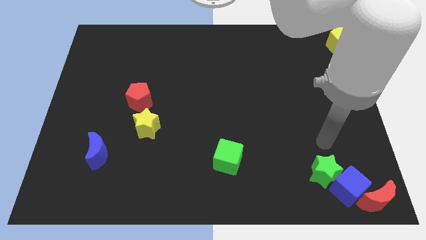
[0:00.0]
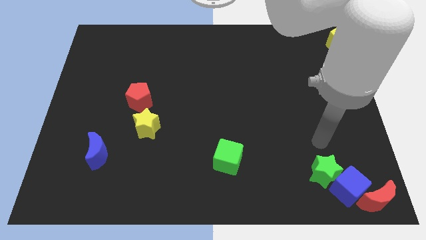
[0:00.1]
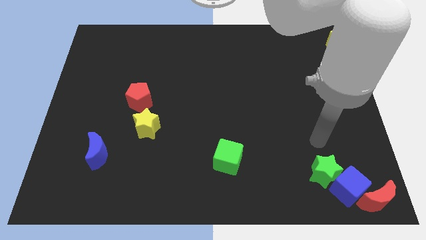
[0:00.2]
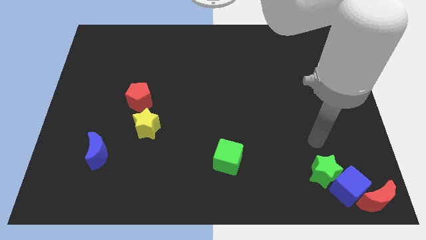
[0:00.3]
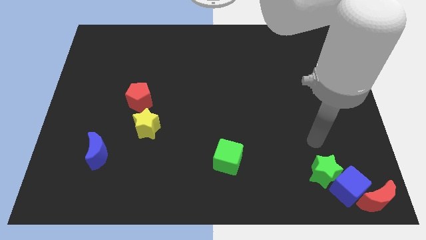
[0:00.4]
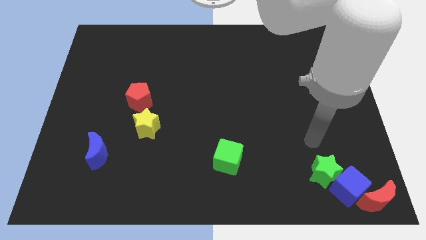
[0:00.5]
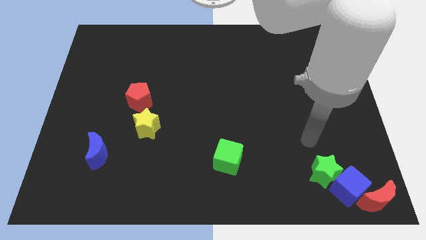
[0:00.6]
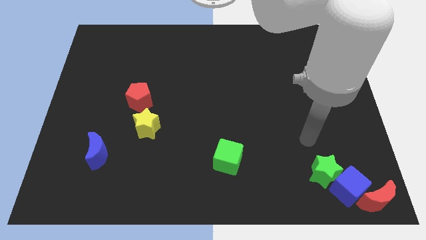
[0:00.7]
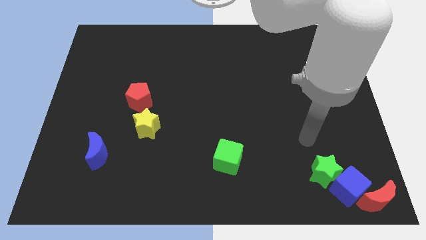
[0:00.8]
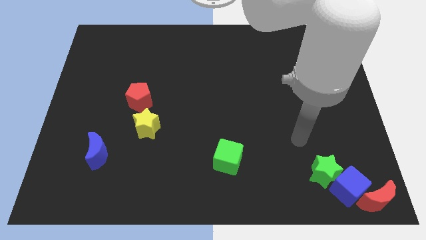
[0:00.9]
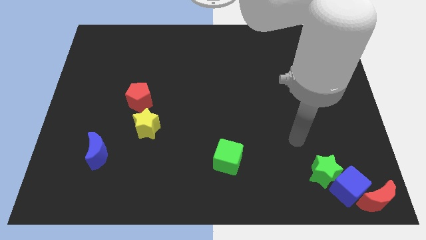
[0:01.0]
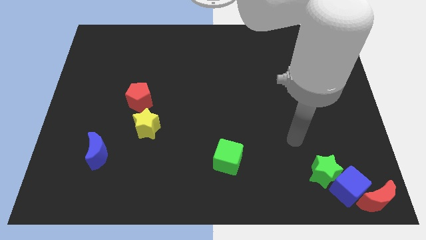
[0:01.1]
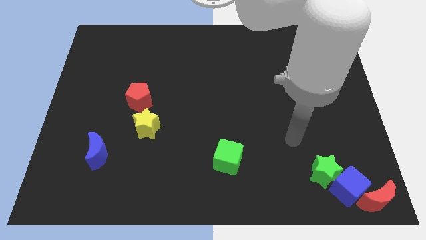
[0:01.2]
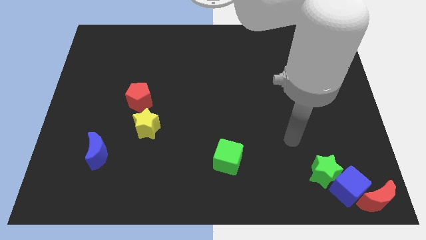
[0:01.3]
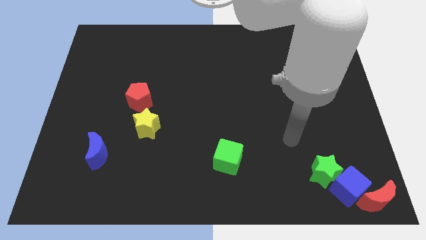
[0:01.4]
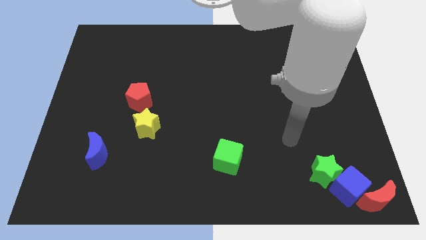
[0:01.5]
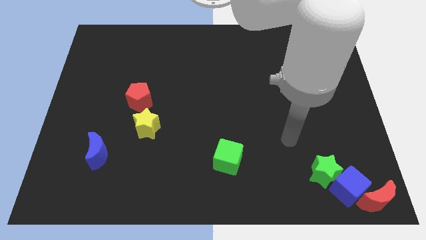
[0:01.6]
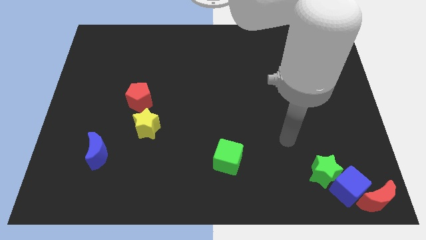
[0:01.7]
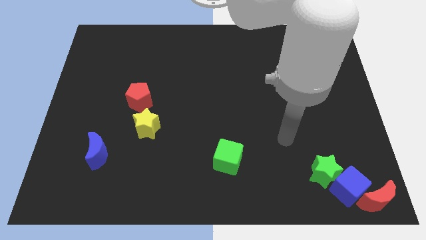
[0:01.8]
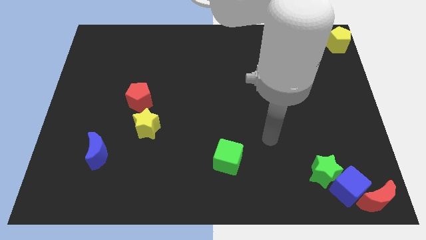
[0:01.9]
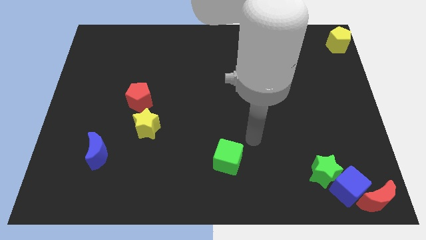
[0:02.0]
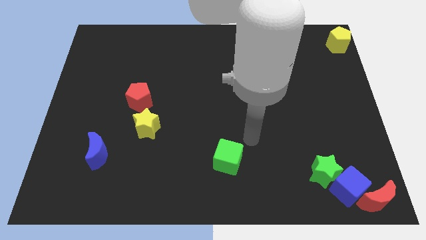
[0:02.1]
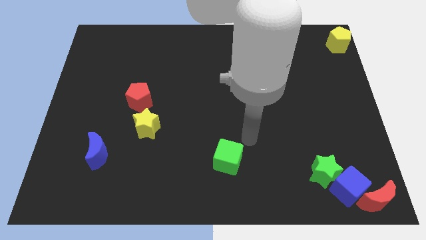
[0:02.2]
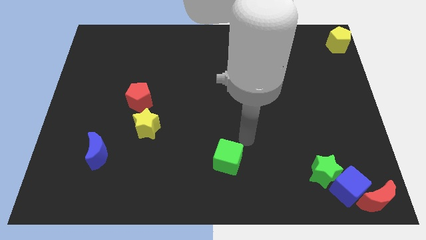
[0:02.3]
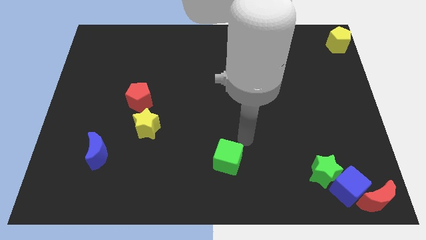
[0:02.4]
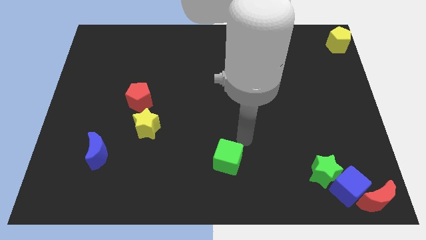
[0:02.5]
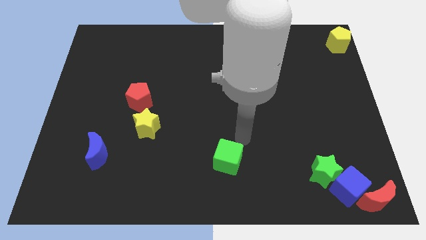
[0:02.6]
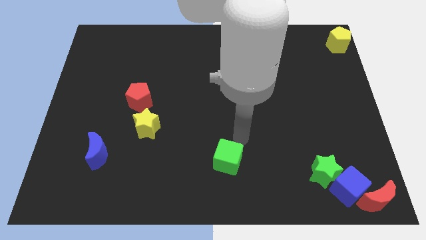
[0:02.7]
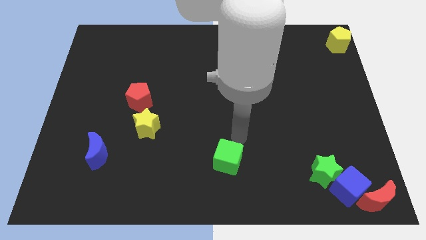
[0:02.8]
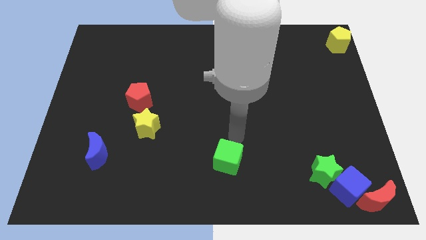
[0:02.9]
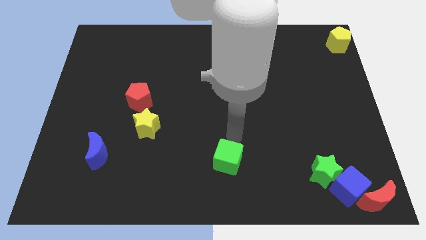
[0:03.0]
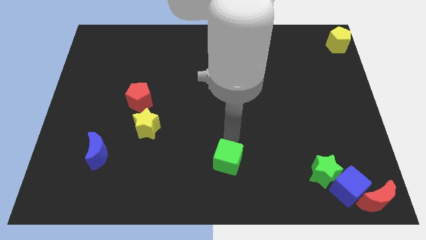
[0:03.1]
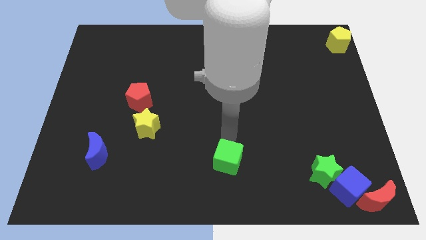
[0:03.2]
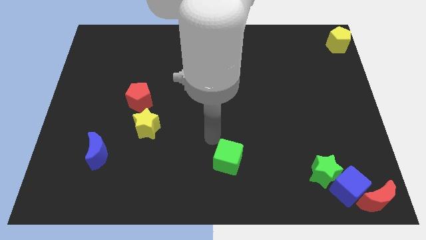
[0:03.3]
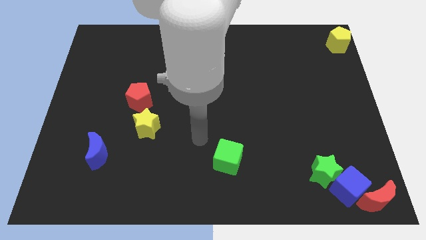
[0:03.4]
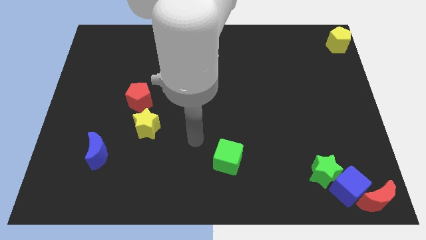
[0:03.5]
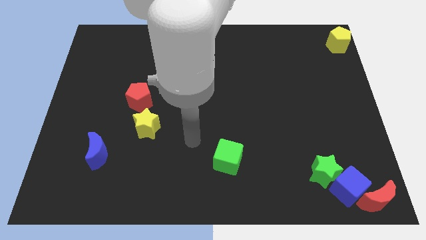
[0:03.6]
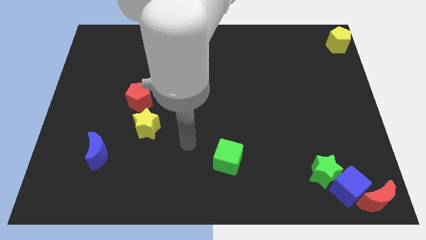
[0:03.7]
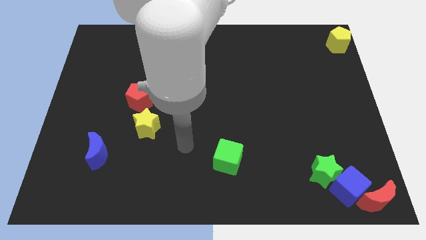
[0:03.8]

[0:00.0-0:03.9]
point your arm at the left of the green cube

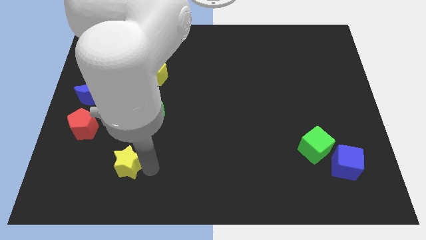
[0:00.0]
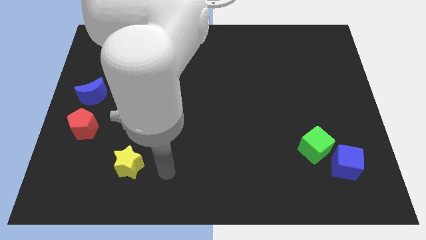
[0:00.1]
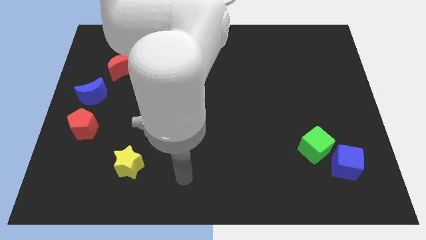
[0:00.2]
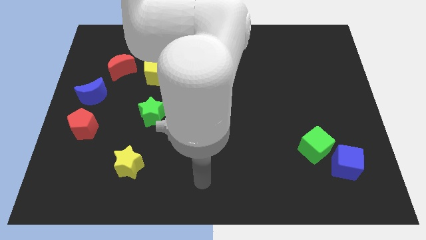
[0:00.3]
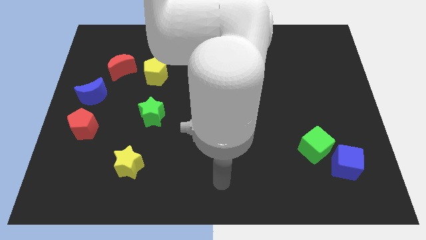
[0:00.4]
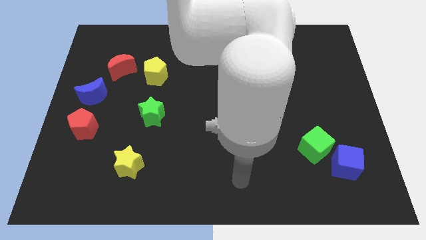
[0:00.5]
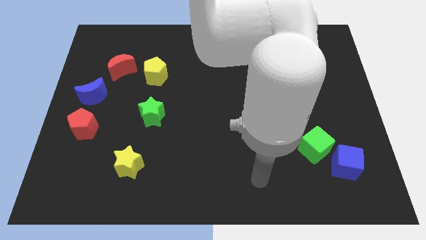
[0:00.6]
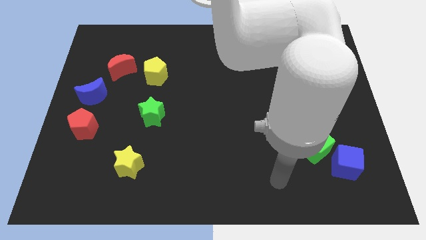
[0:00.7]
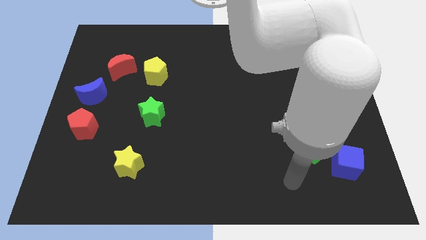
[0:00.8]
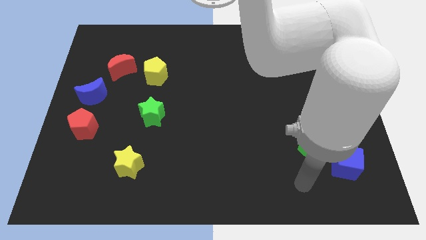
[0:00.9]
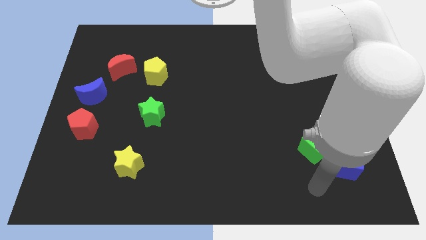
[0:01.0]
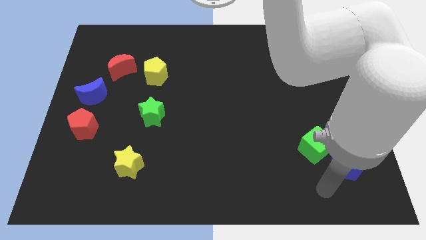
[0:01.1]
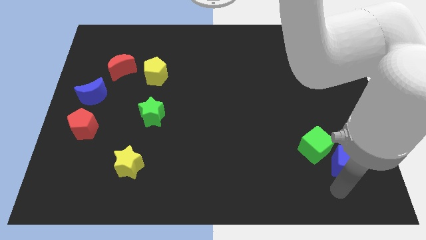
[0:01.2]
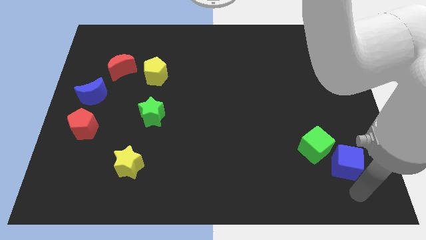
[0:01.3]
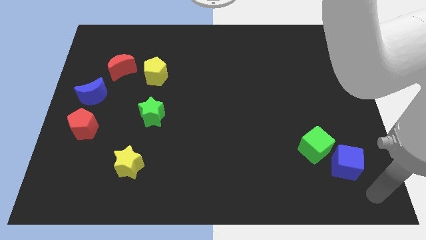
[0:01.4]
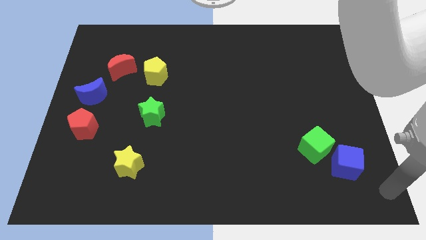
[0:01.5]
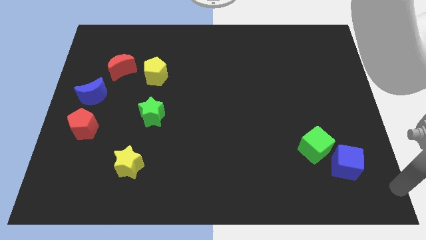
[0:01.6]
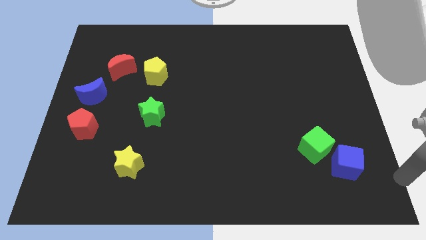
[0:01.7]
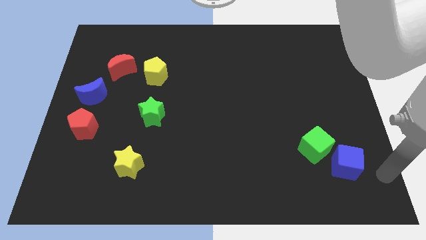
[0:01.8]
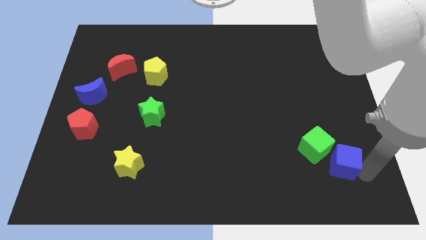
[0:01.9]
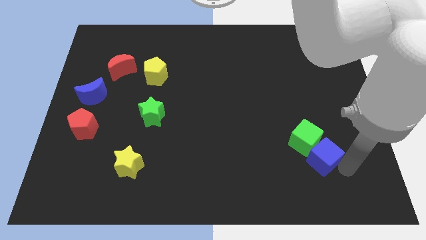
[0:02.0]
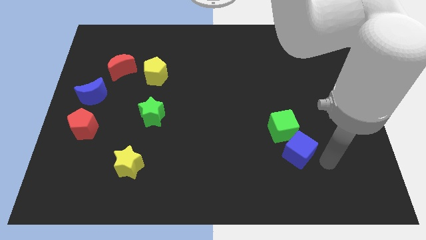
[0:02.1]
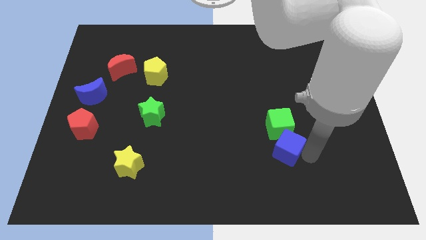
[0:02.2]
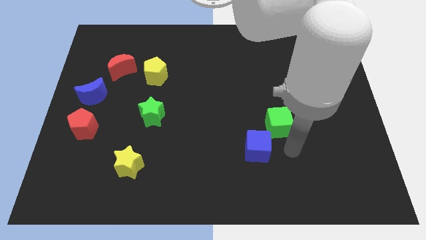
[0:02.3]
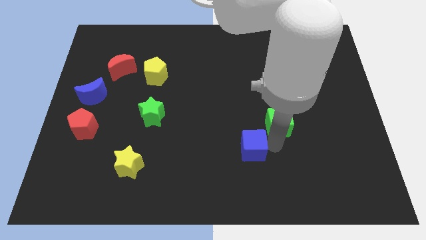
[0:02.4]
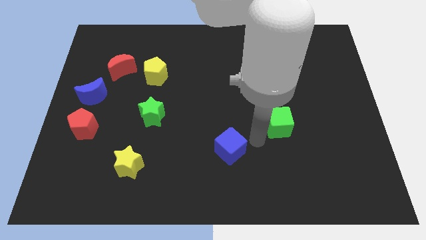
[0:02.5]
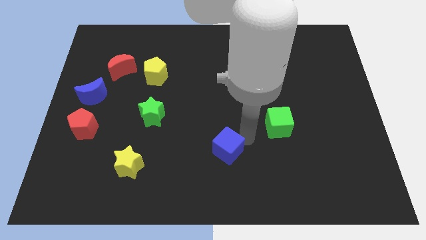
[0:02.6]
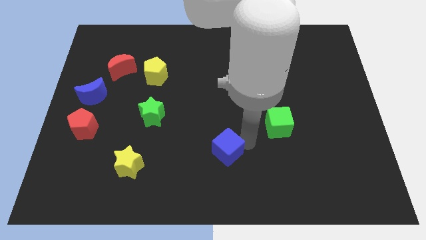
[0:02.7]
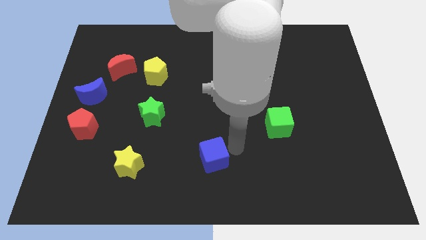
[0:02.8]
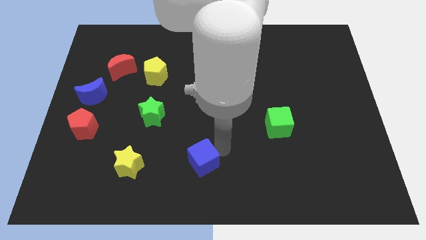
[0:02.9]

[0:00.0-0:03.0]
push the blue cube to the bottom left of the green cube

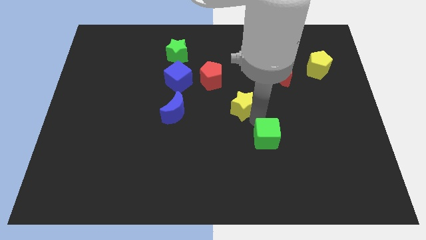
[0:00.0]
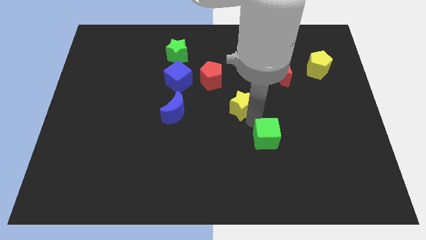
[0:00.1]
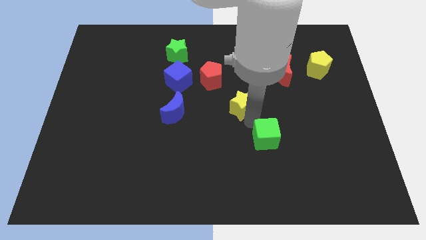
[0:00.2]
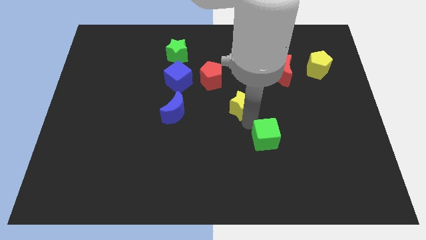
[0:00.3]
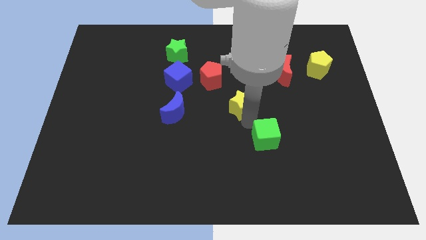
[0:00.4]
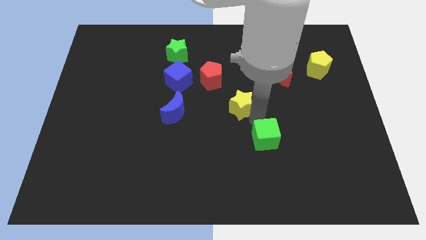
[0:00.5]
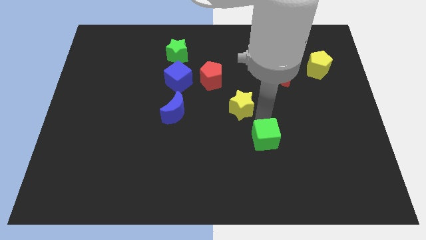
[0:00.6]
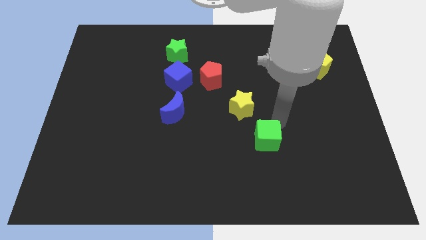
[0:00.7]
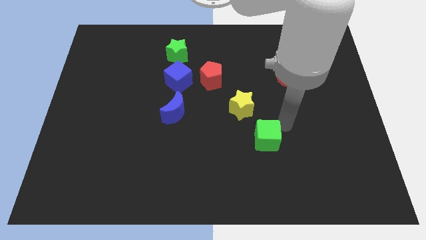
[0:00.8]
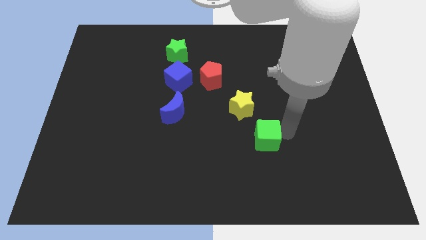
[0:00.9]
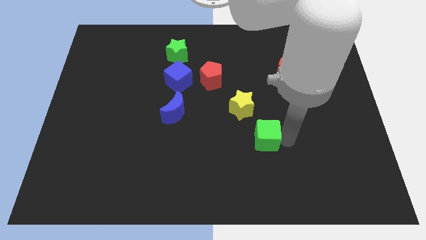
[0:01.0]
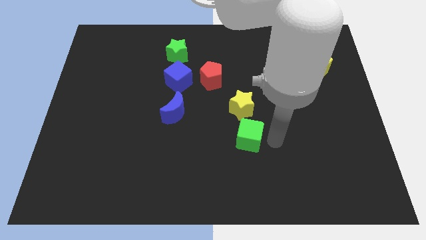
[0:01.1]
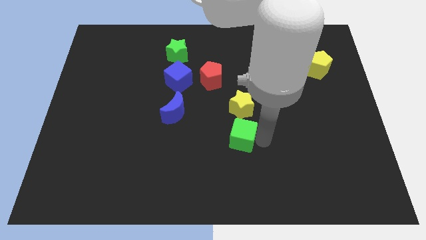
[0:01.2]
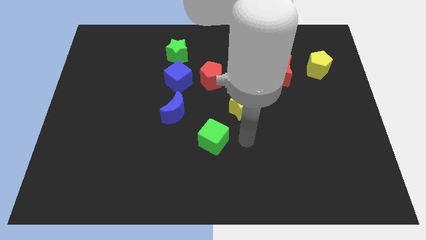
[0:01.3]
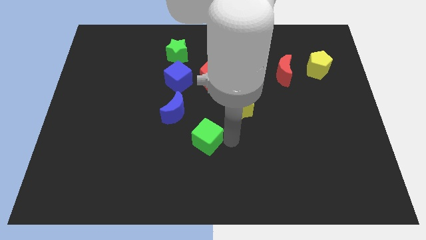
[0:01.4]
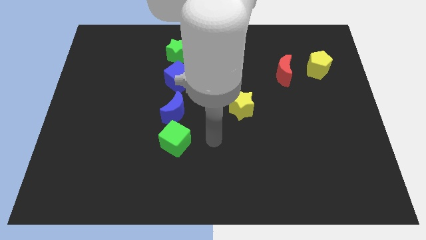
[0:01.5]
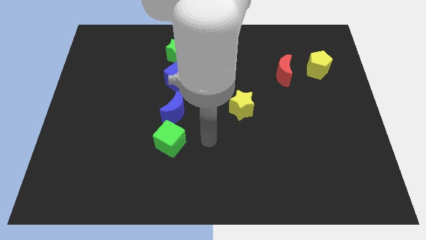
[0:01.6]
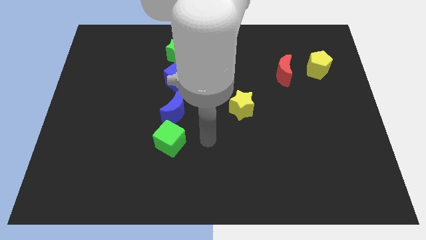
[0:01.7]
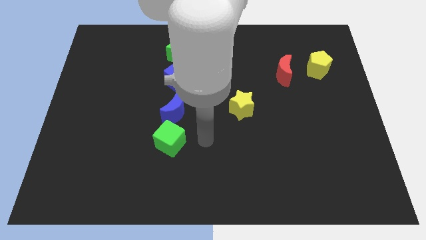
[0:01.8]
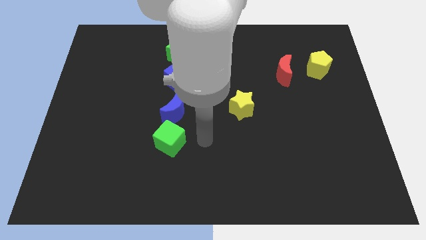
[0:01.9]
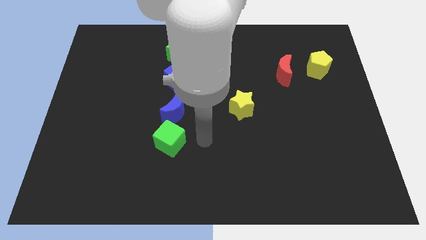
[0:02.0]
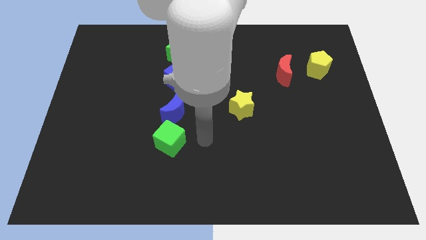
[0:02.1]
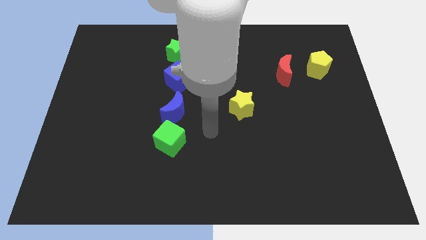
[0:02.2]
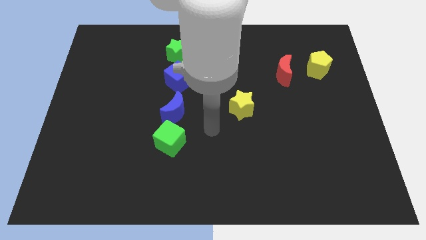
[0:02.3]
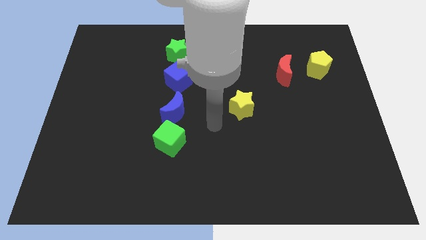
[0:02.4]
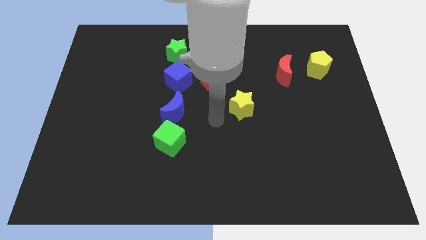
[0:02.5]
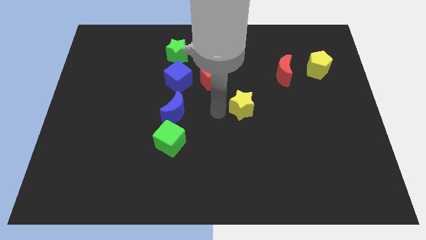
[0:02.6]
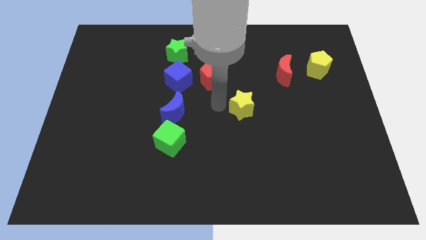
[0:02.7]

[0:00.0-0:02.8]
push the green cube to the bottom of the blue crescent
